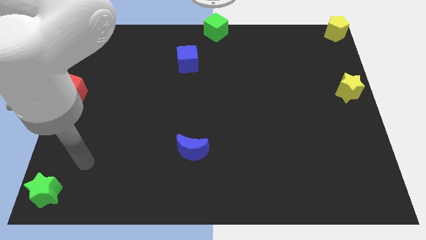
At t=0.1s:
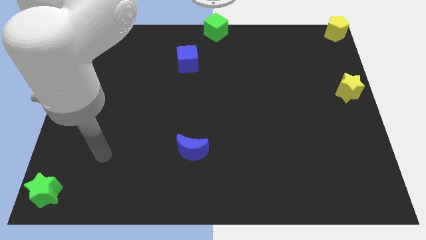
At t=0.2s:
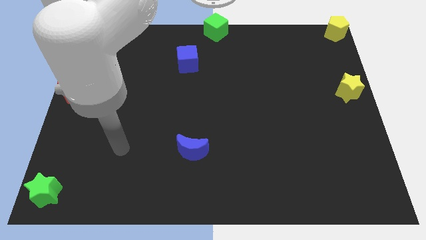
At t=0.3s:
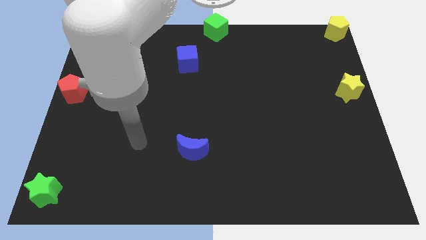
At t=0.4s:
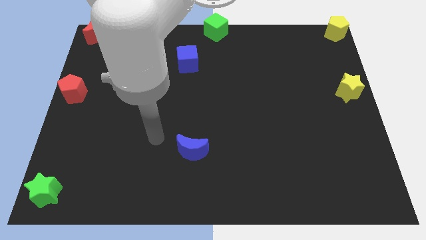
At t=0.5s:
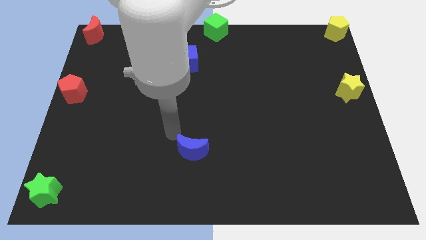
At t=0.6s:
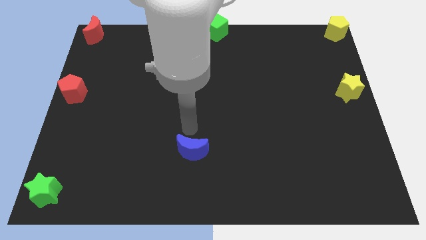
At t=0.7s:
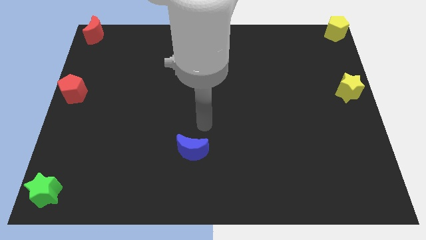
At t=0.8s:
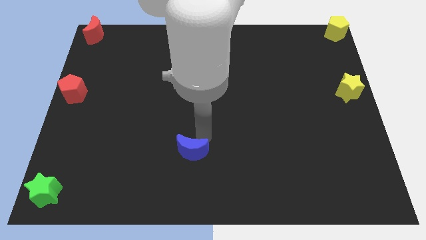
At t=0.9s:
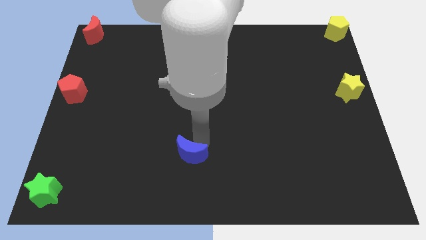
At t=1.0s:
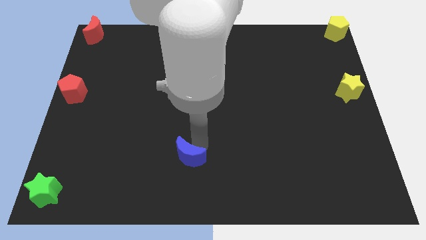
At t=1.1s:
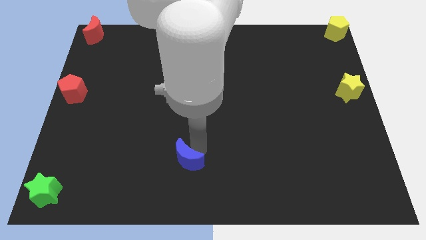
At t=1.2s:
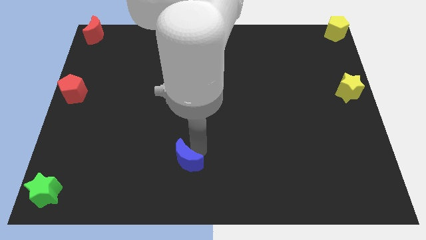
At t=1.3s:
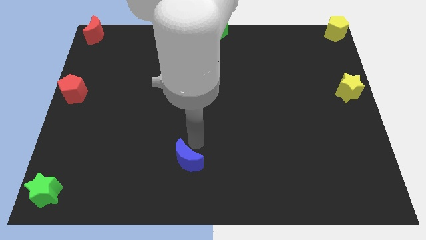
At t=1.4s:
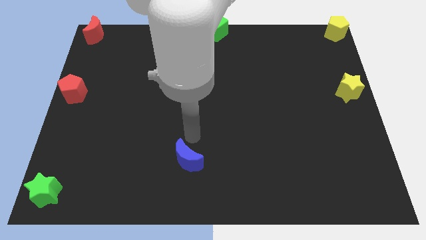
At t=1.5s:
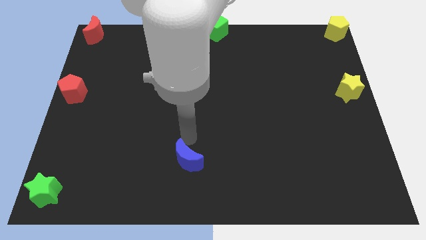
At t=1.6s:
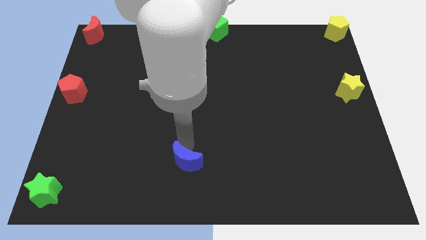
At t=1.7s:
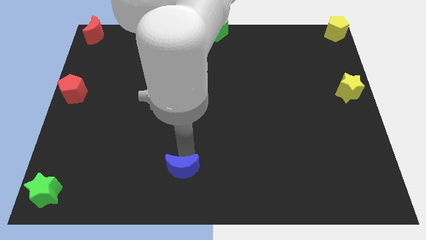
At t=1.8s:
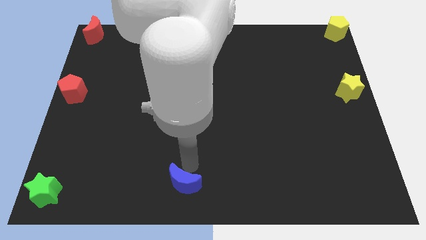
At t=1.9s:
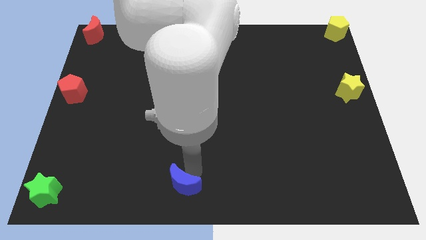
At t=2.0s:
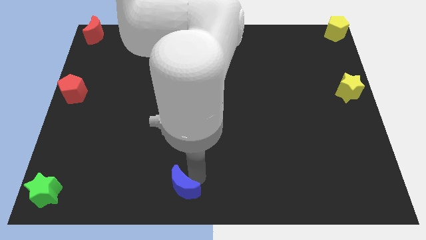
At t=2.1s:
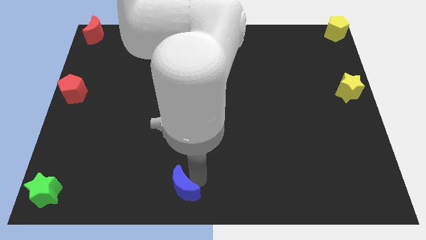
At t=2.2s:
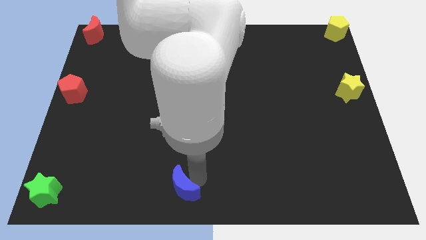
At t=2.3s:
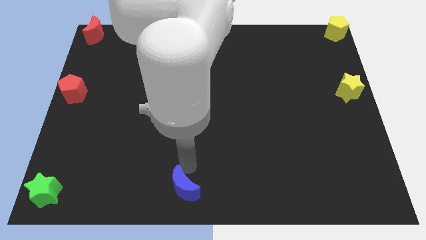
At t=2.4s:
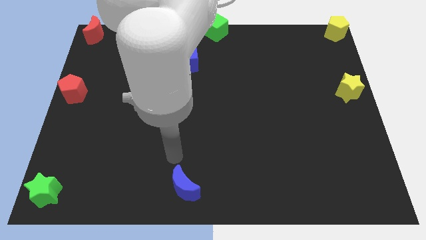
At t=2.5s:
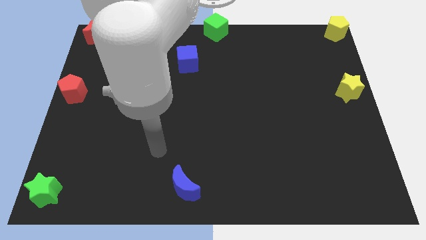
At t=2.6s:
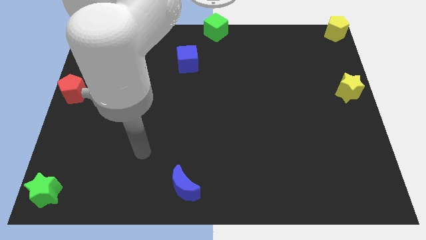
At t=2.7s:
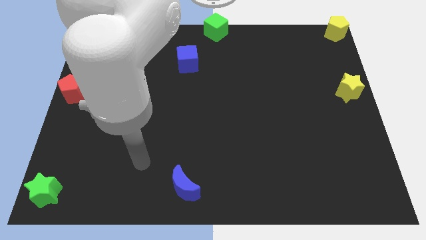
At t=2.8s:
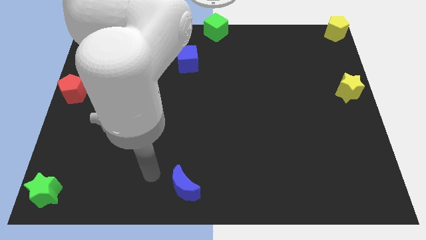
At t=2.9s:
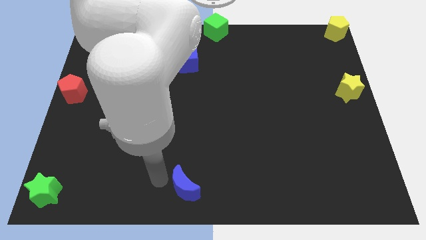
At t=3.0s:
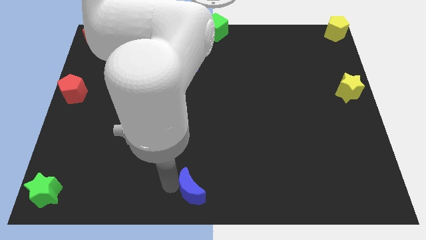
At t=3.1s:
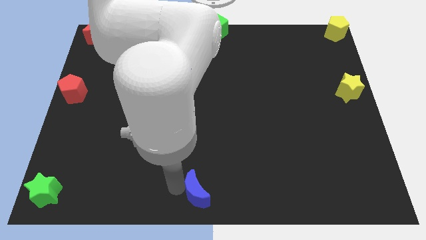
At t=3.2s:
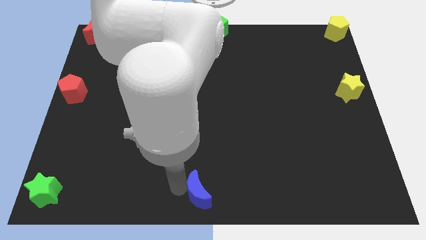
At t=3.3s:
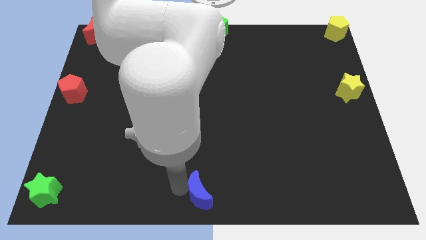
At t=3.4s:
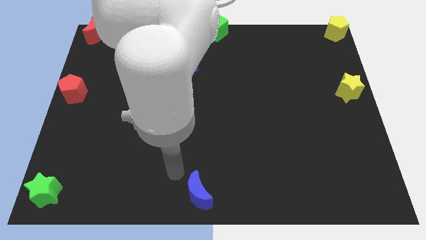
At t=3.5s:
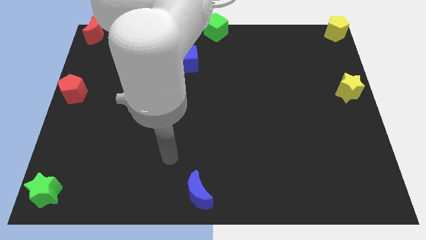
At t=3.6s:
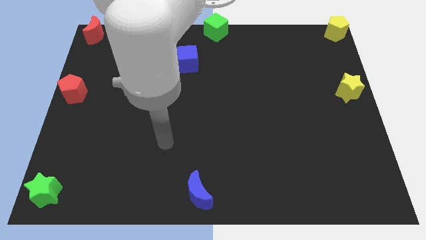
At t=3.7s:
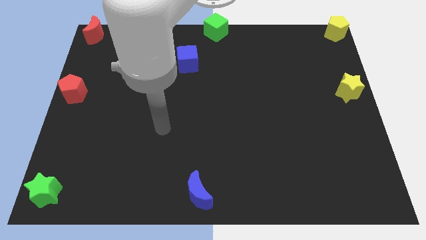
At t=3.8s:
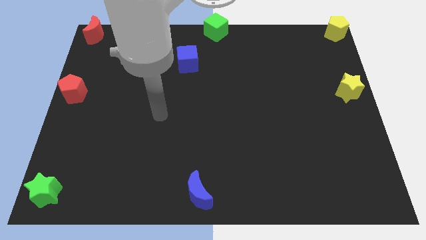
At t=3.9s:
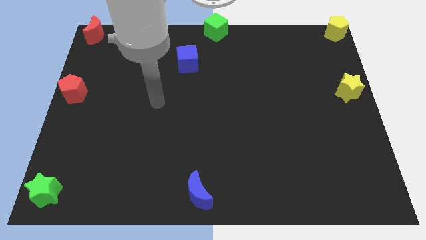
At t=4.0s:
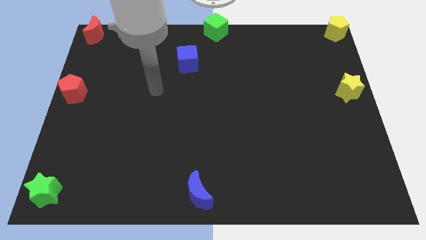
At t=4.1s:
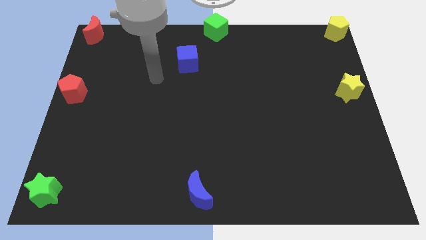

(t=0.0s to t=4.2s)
move the blue crescent to the bottom center of the board

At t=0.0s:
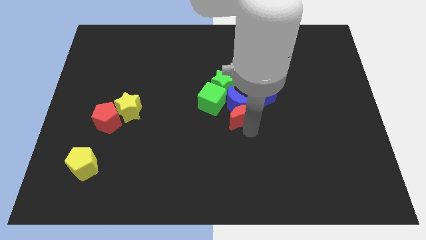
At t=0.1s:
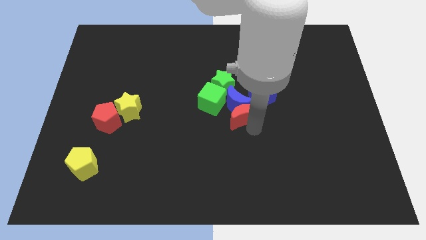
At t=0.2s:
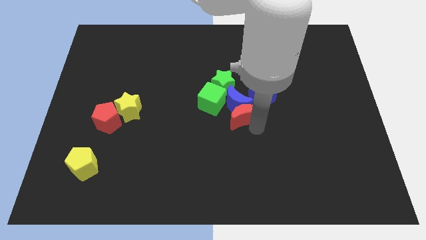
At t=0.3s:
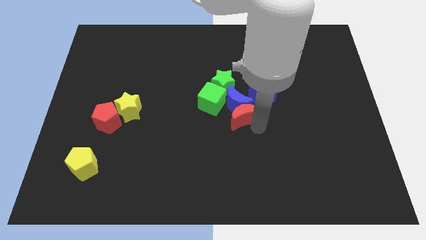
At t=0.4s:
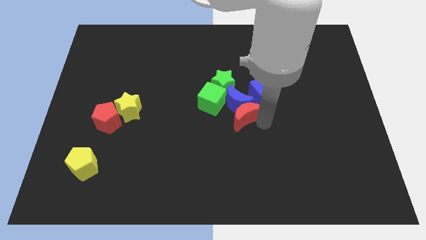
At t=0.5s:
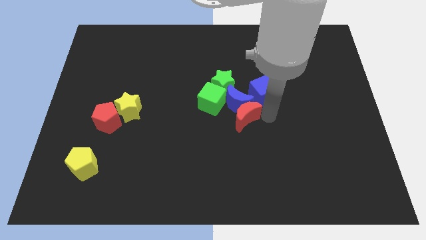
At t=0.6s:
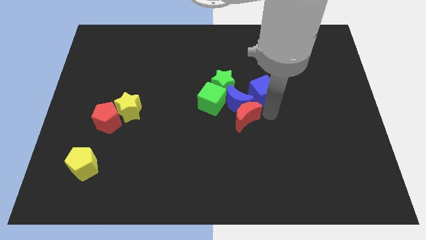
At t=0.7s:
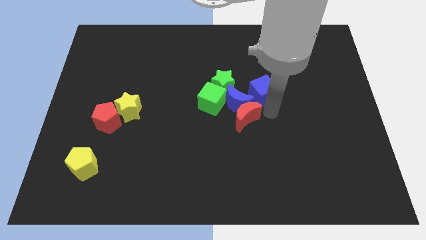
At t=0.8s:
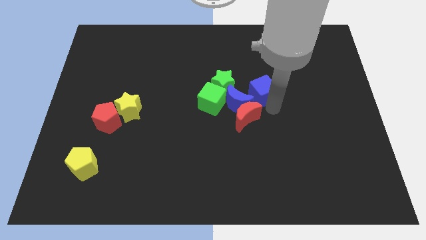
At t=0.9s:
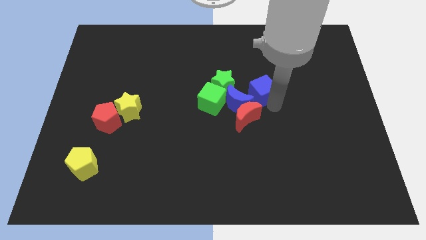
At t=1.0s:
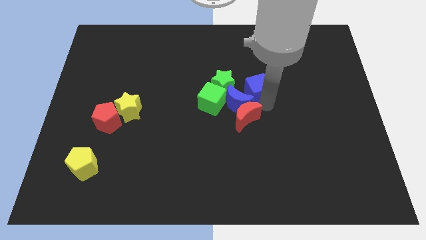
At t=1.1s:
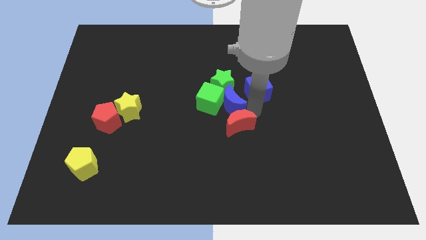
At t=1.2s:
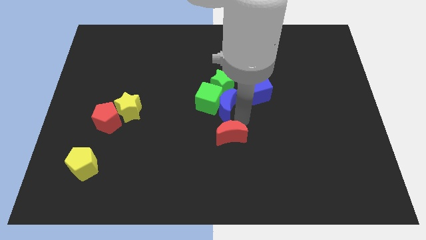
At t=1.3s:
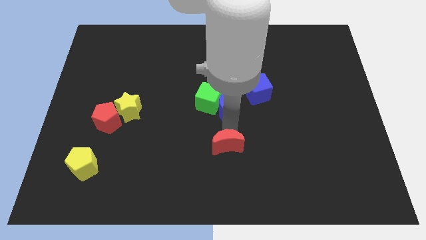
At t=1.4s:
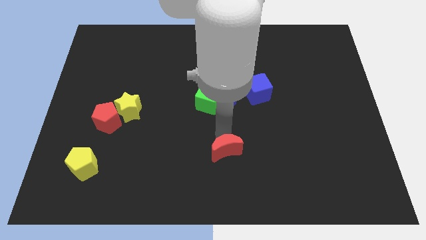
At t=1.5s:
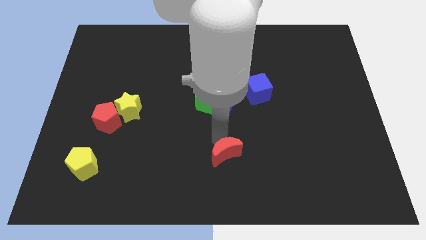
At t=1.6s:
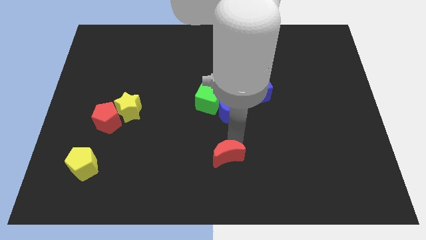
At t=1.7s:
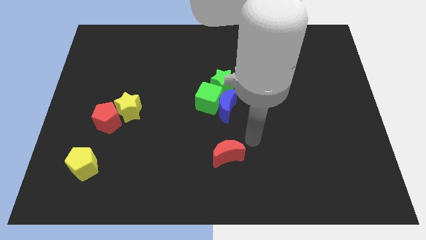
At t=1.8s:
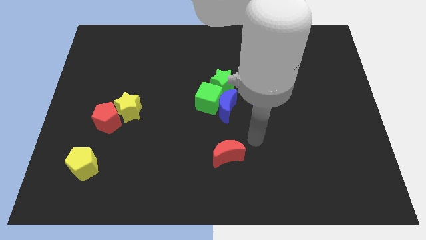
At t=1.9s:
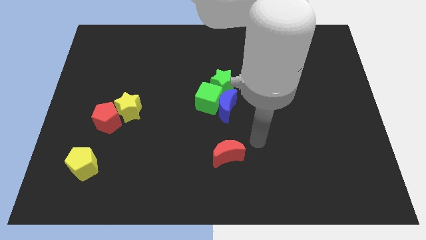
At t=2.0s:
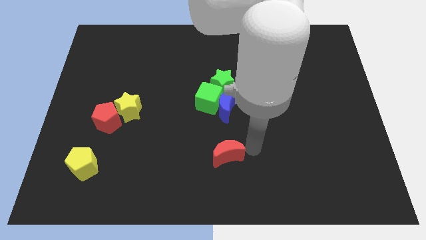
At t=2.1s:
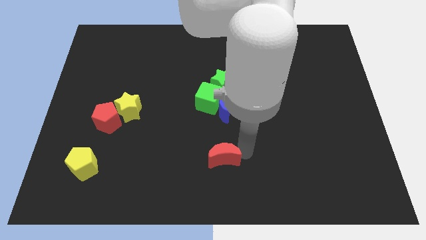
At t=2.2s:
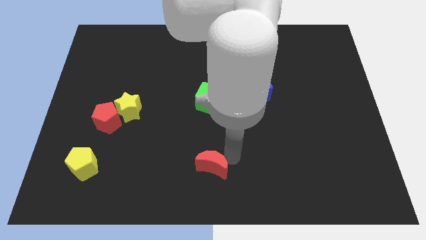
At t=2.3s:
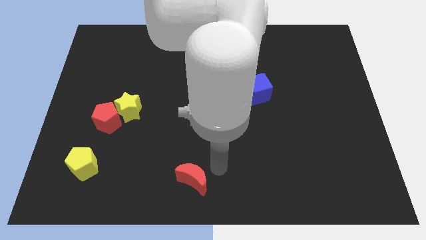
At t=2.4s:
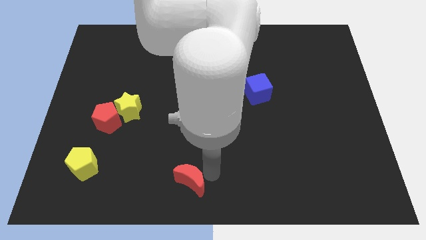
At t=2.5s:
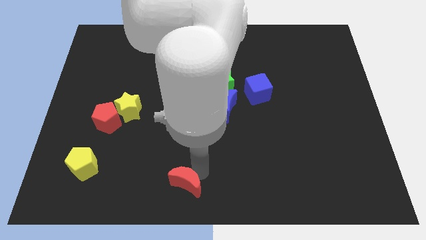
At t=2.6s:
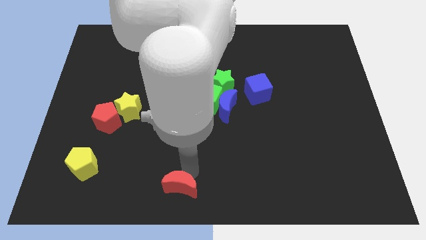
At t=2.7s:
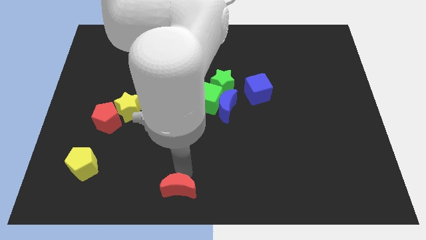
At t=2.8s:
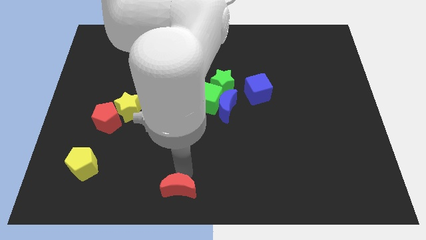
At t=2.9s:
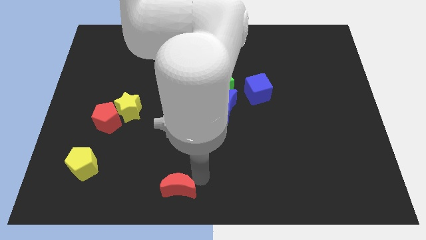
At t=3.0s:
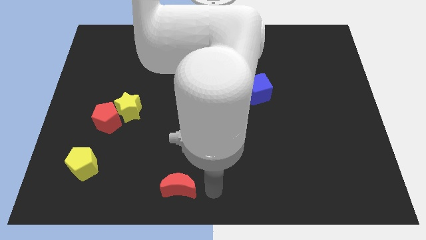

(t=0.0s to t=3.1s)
move the red crescent to the bottom

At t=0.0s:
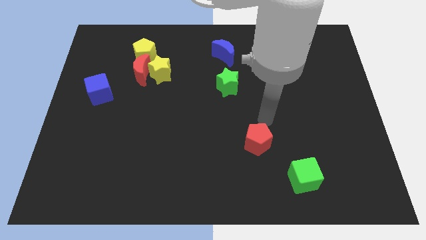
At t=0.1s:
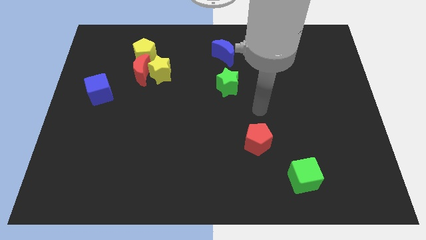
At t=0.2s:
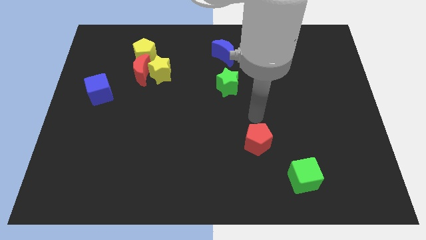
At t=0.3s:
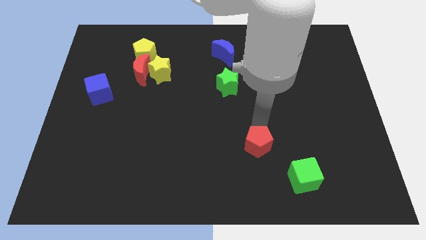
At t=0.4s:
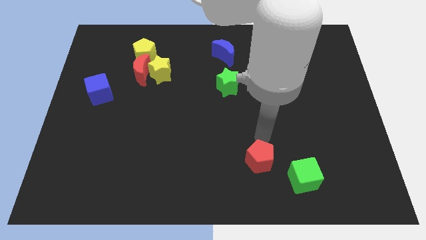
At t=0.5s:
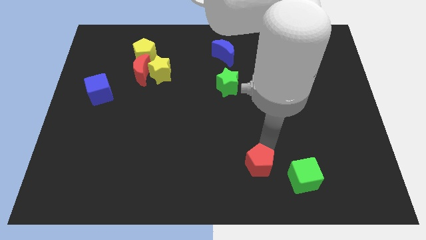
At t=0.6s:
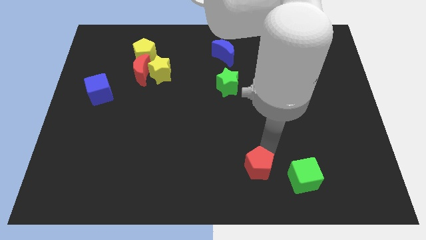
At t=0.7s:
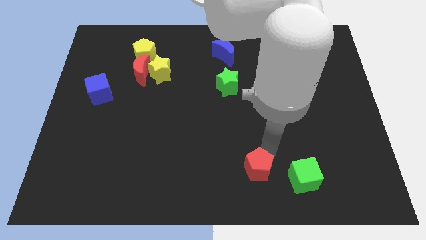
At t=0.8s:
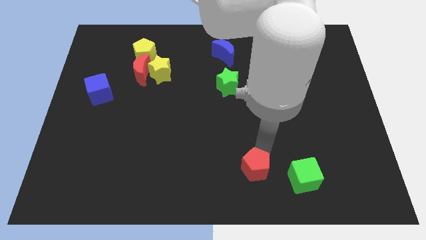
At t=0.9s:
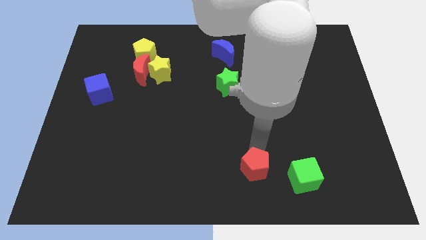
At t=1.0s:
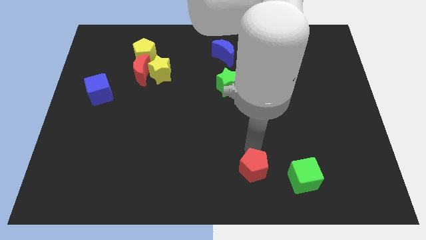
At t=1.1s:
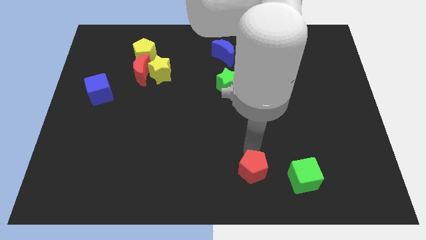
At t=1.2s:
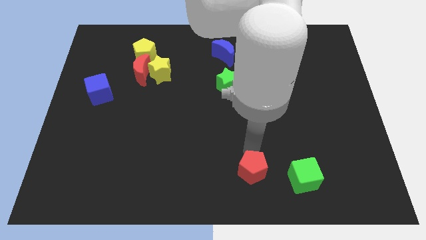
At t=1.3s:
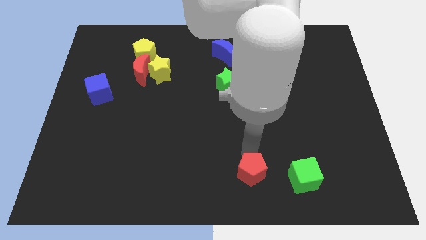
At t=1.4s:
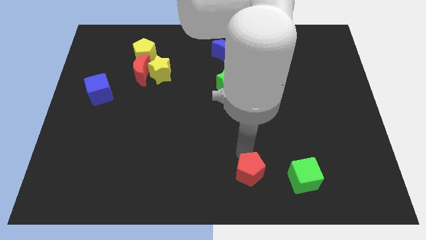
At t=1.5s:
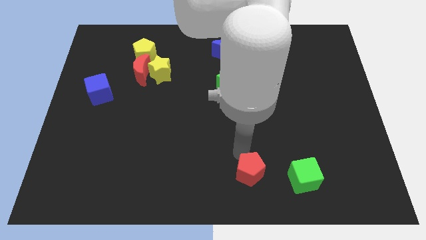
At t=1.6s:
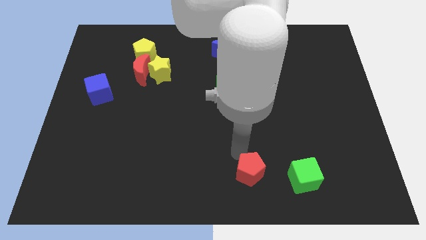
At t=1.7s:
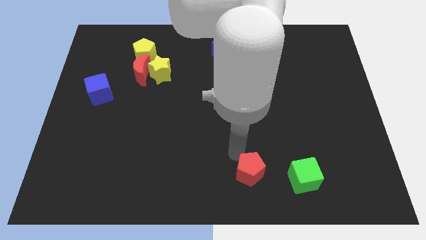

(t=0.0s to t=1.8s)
move the red pentagon towards the bottom

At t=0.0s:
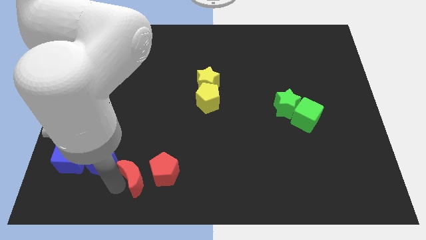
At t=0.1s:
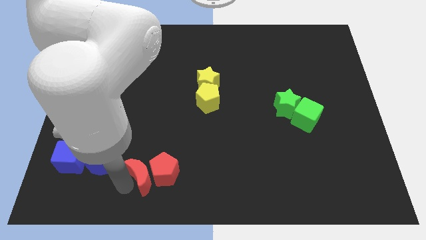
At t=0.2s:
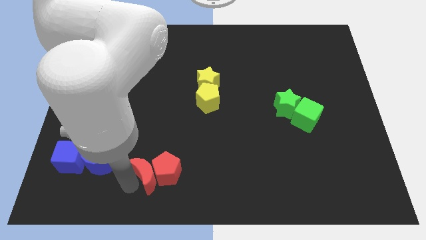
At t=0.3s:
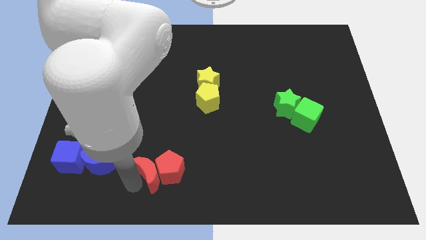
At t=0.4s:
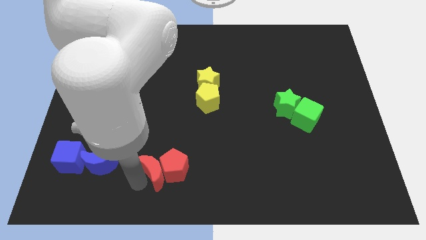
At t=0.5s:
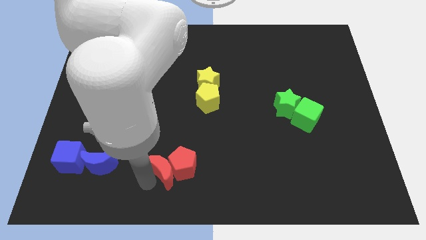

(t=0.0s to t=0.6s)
move the red crescent into red pentagon
